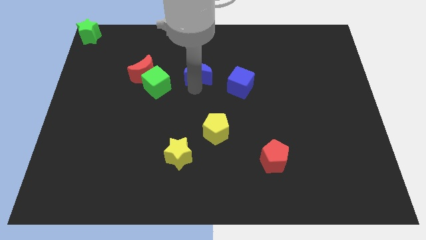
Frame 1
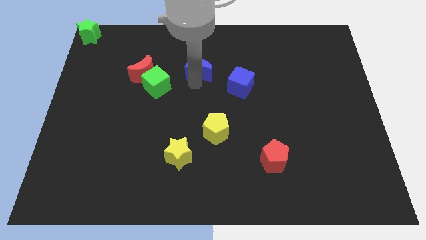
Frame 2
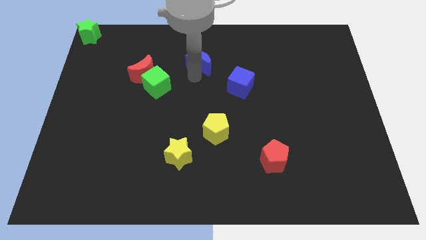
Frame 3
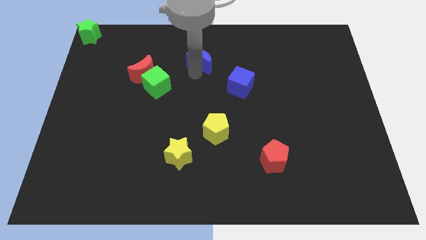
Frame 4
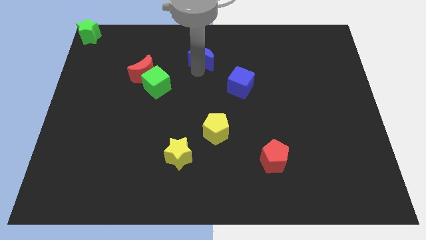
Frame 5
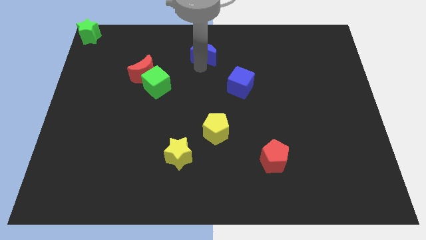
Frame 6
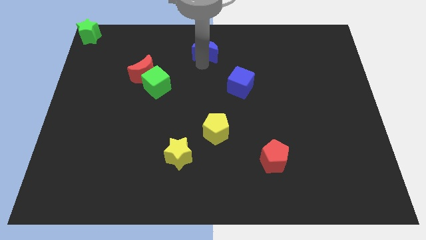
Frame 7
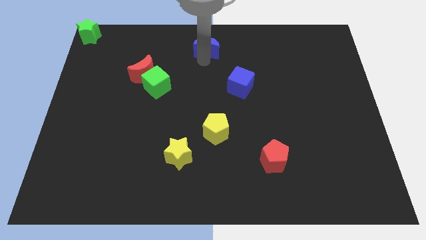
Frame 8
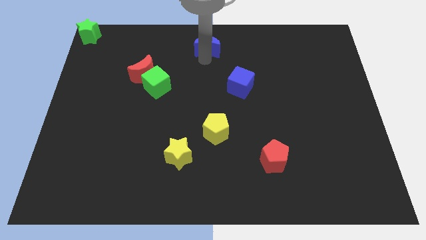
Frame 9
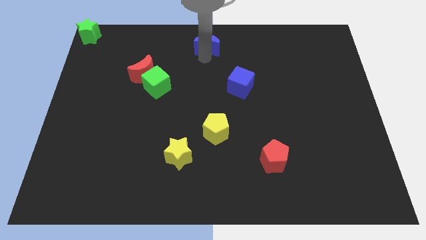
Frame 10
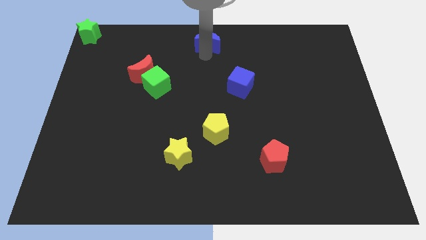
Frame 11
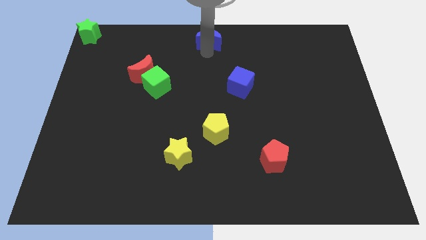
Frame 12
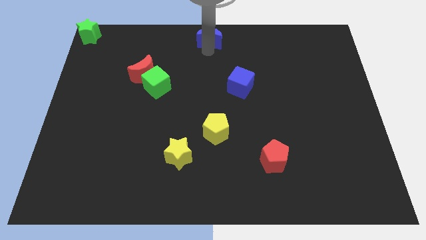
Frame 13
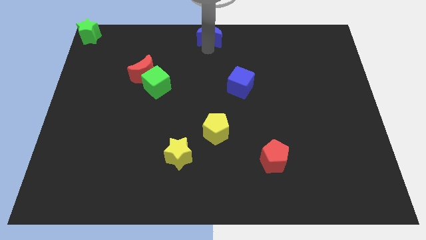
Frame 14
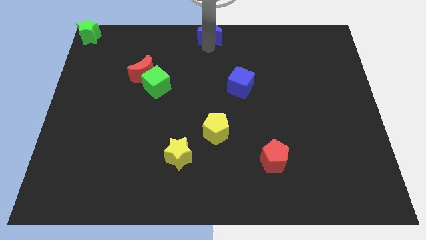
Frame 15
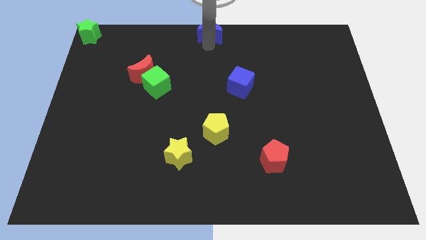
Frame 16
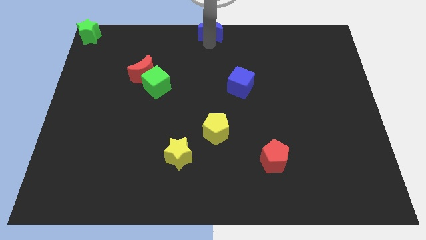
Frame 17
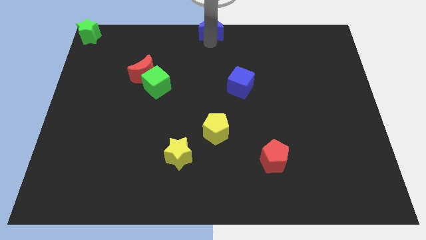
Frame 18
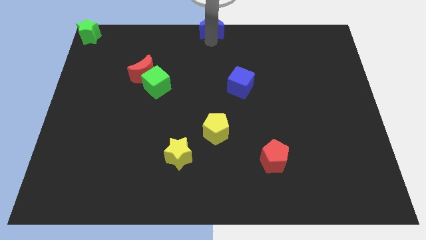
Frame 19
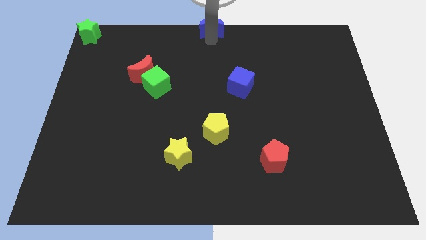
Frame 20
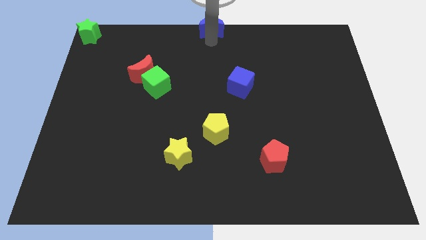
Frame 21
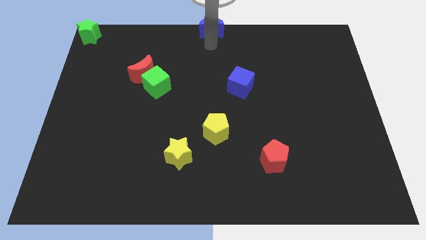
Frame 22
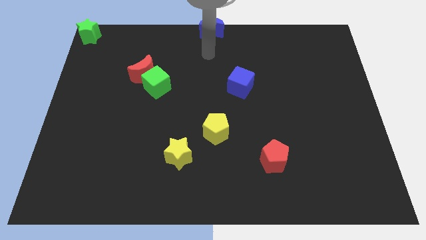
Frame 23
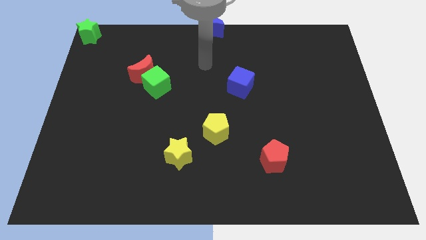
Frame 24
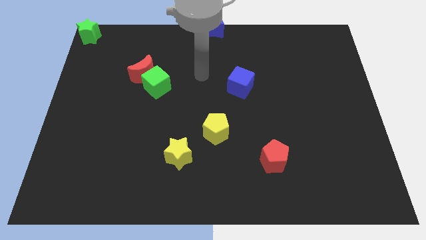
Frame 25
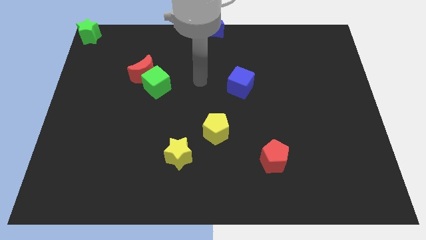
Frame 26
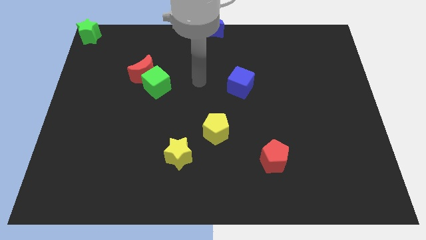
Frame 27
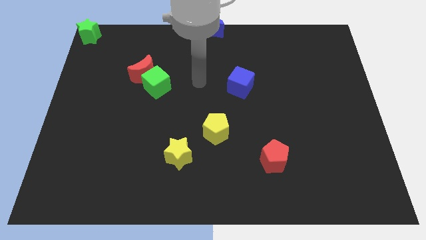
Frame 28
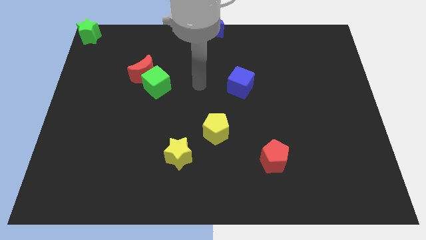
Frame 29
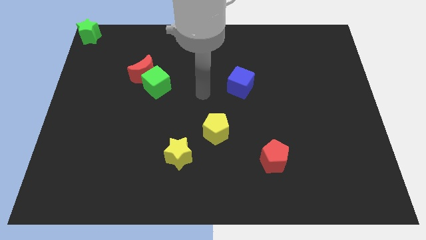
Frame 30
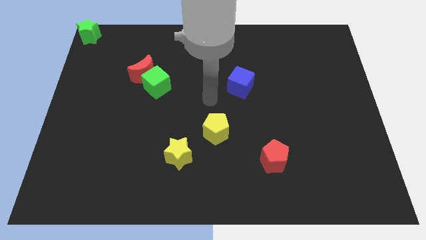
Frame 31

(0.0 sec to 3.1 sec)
place the blue crescent at the center top

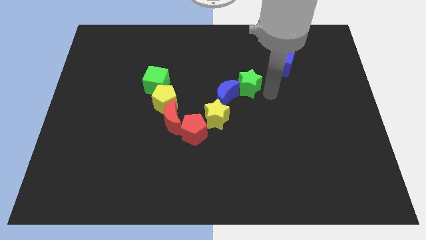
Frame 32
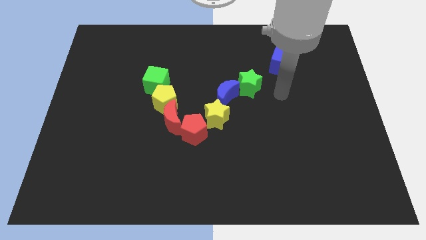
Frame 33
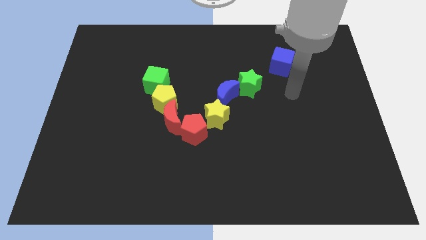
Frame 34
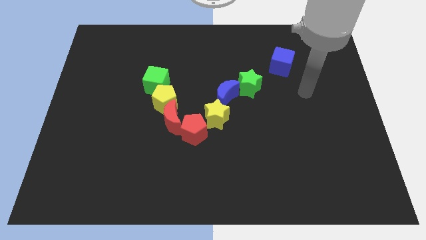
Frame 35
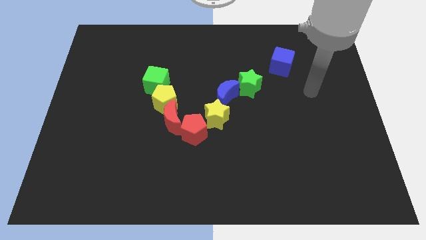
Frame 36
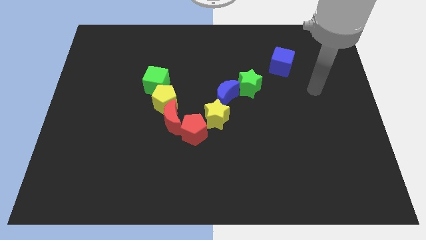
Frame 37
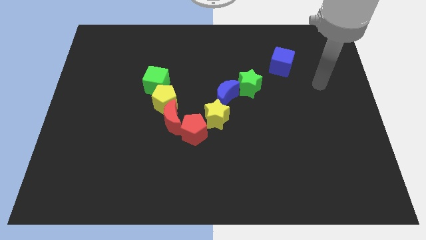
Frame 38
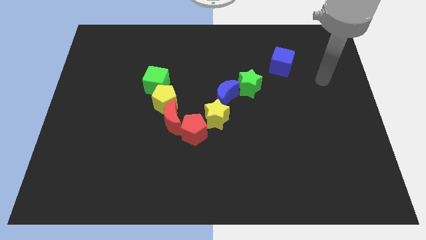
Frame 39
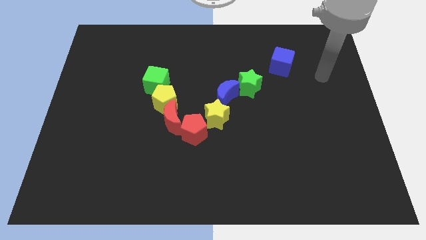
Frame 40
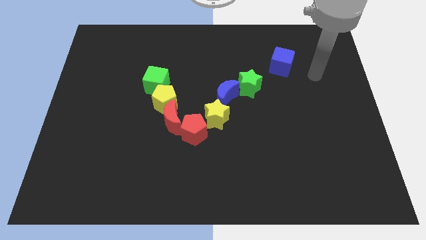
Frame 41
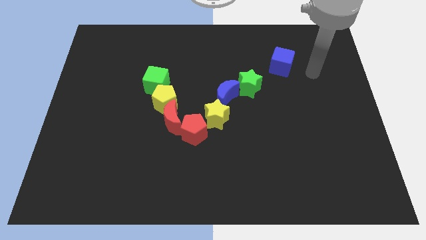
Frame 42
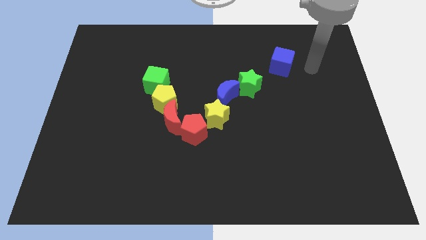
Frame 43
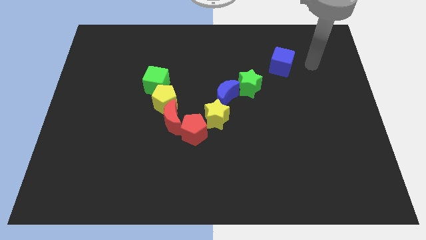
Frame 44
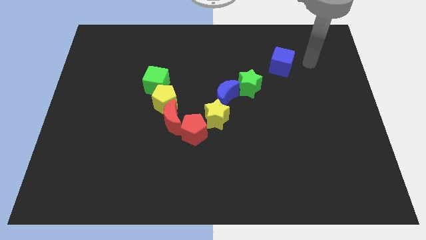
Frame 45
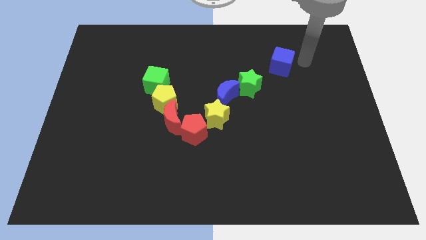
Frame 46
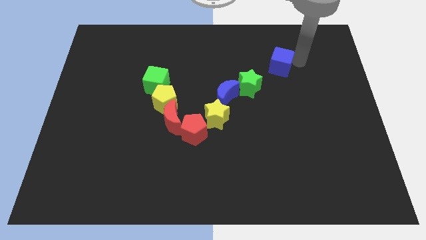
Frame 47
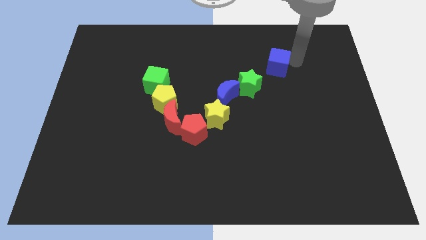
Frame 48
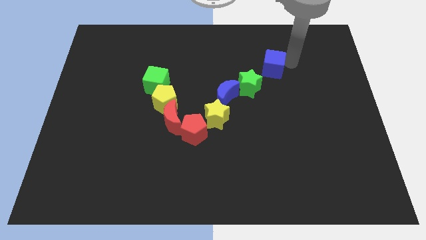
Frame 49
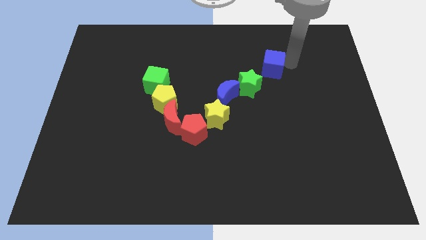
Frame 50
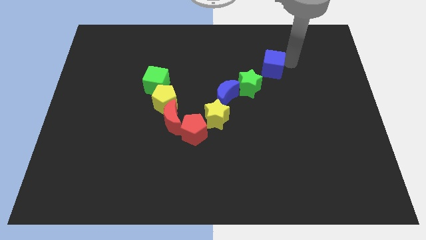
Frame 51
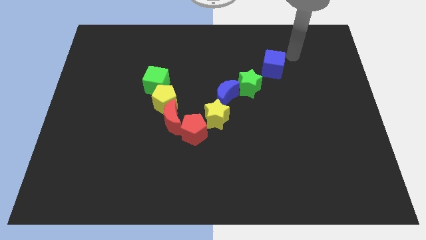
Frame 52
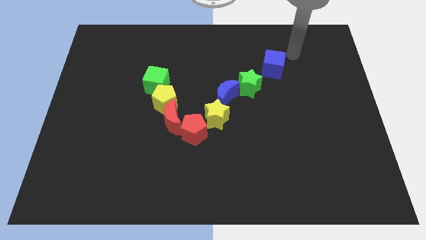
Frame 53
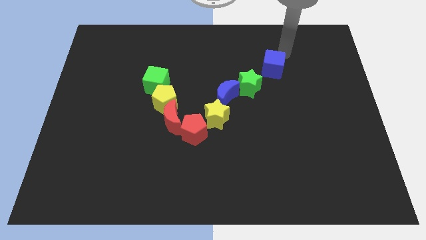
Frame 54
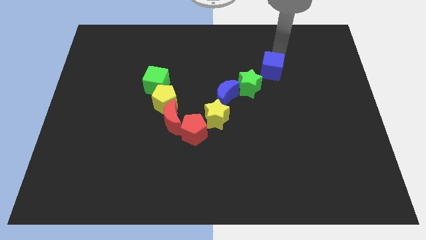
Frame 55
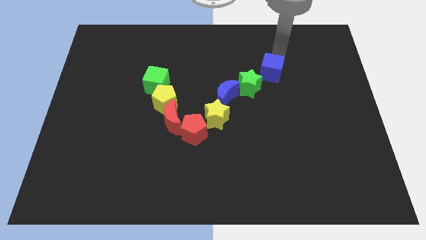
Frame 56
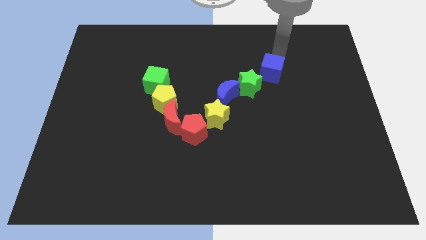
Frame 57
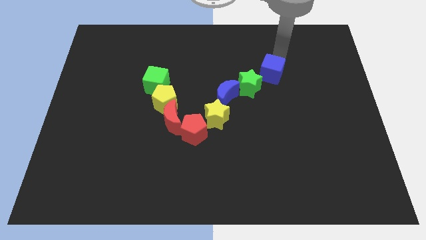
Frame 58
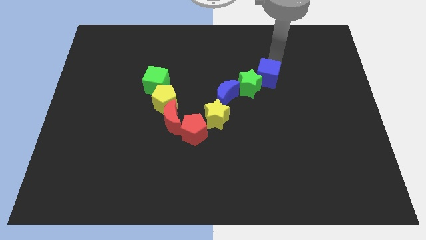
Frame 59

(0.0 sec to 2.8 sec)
move blue cube right above the green star

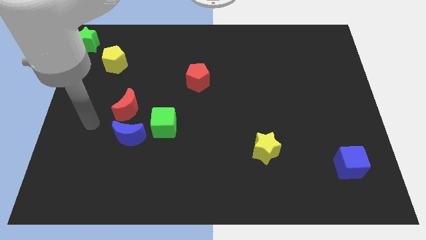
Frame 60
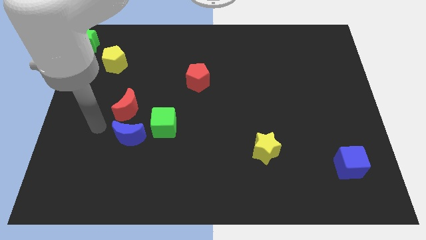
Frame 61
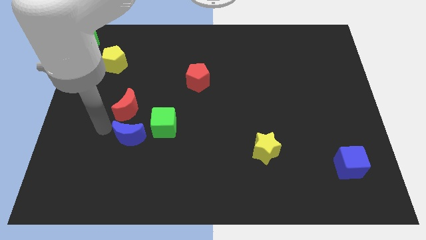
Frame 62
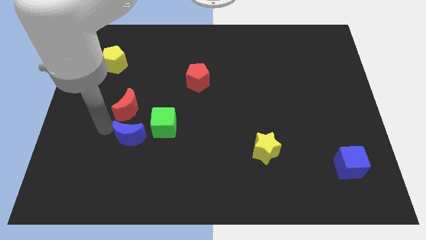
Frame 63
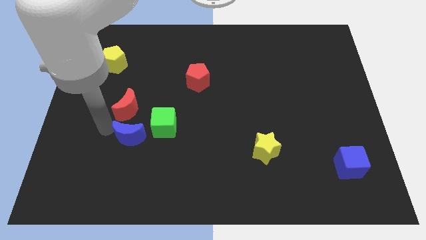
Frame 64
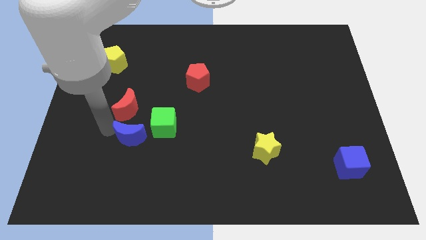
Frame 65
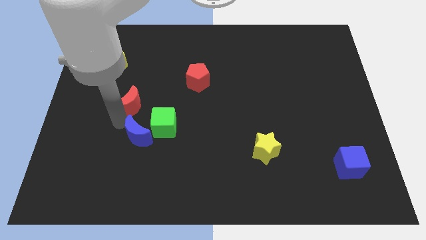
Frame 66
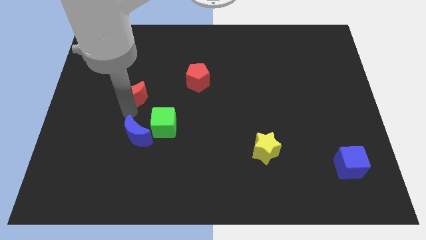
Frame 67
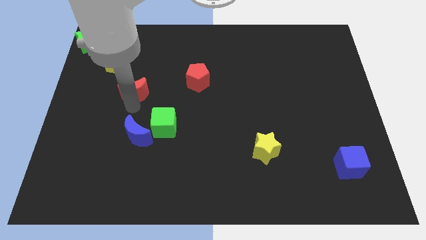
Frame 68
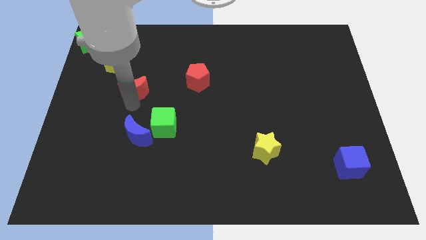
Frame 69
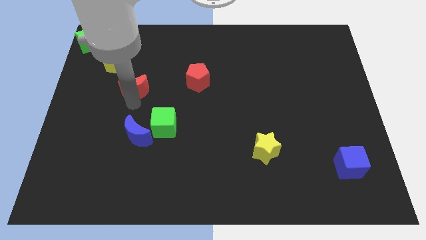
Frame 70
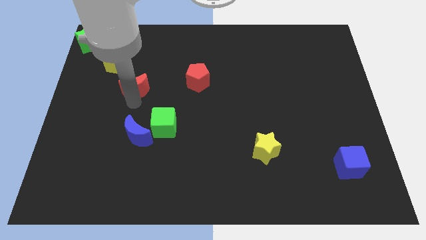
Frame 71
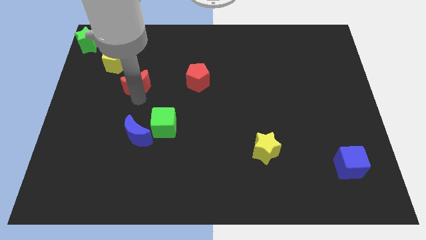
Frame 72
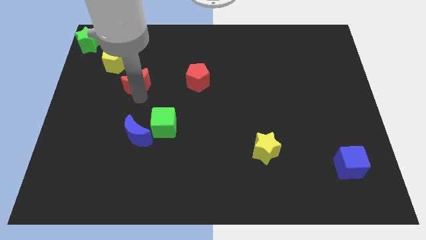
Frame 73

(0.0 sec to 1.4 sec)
separate red and blue crescents

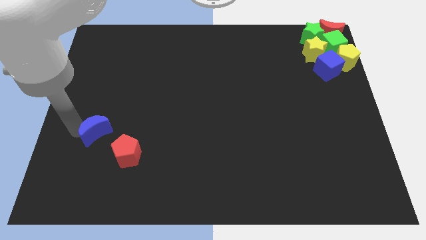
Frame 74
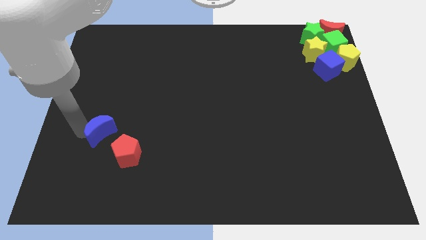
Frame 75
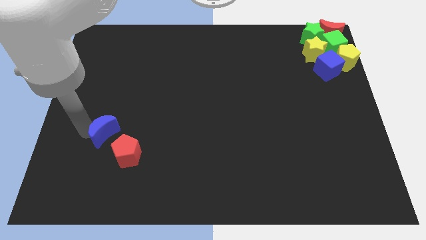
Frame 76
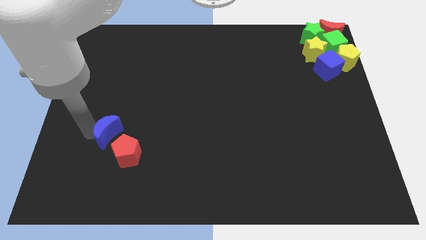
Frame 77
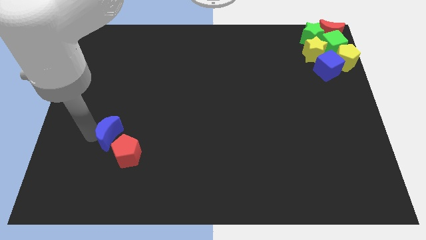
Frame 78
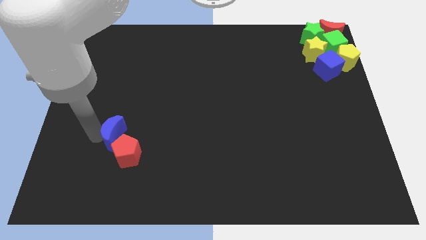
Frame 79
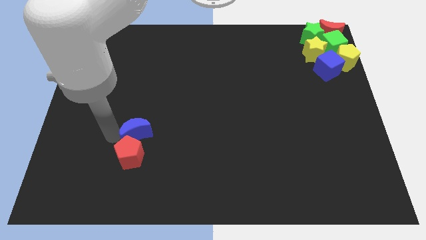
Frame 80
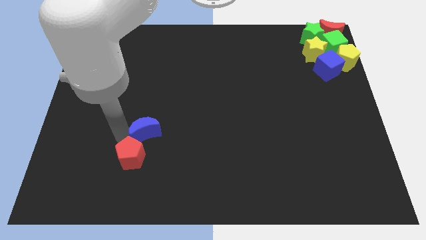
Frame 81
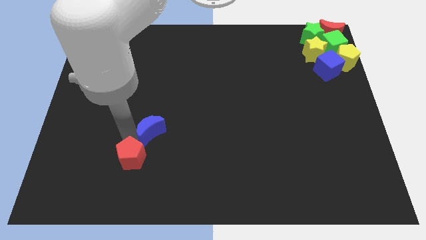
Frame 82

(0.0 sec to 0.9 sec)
move the blue crescent into the red pentagon

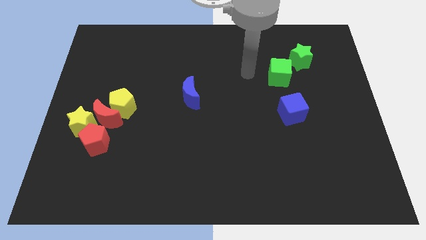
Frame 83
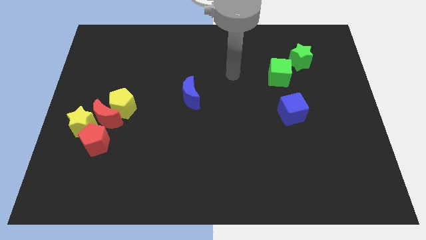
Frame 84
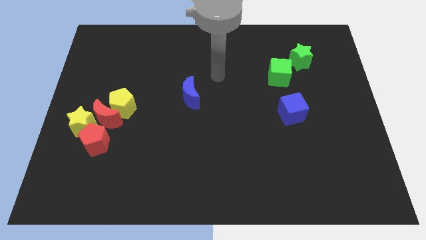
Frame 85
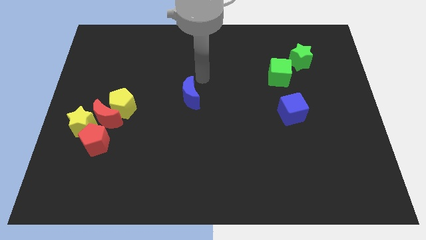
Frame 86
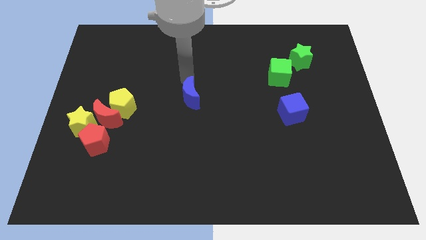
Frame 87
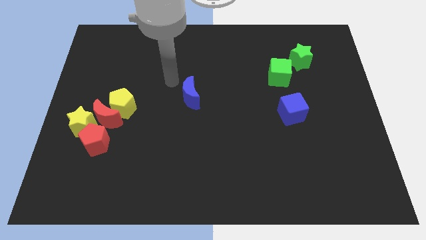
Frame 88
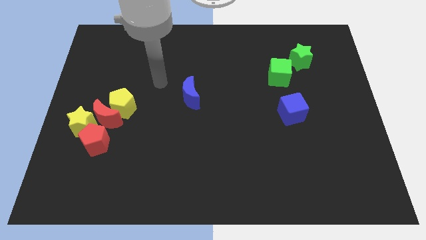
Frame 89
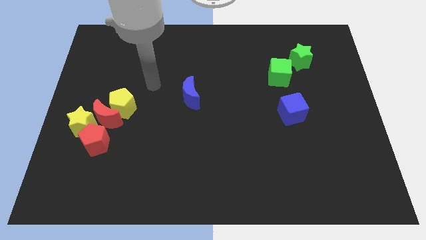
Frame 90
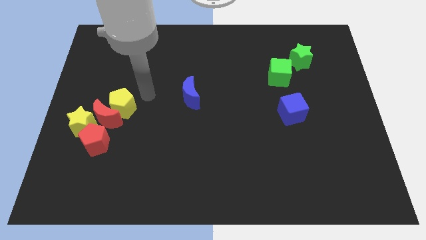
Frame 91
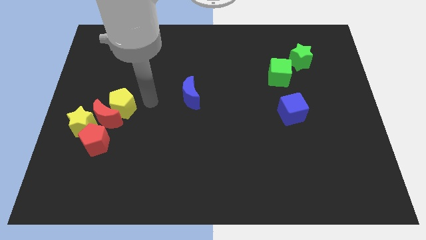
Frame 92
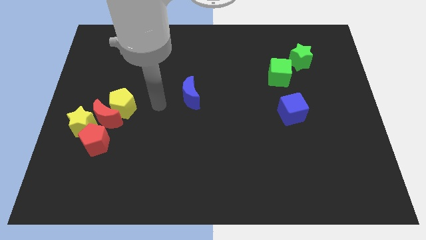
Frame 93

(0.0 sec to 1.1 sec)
move your arm between the red moon and yellow pentagon
